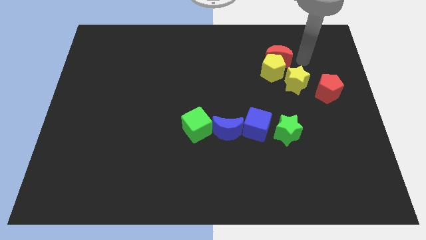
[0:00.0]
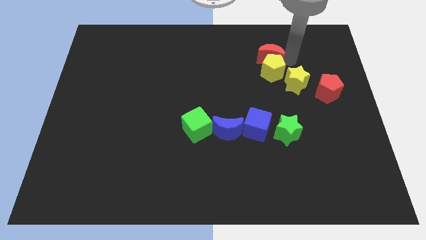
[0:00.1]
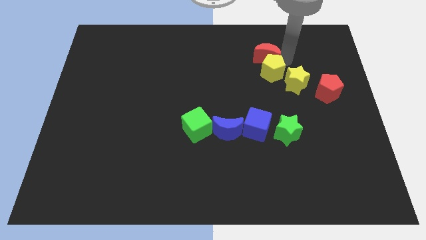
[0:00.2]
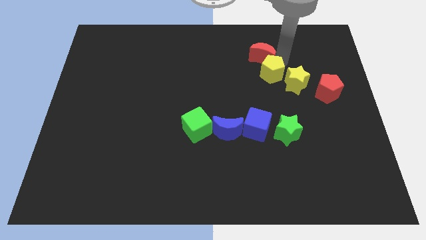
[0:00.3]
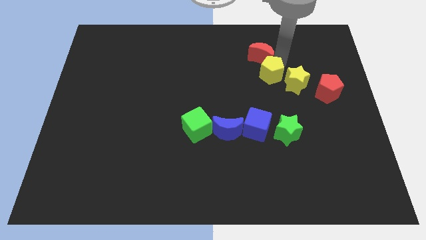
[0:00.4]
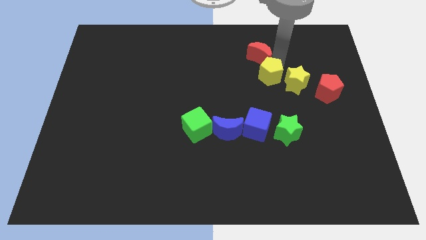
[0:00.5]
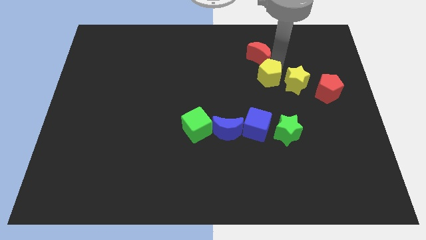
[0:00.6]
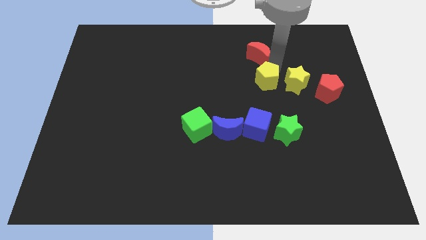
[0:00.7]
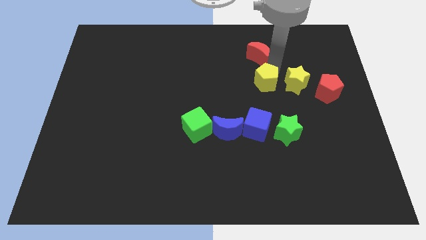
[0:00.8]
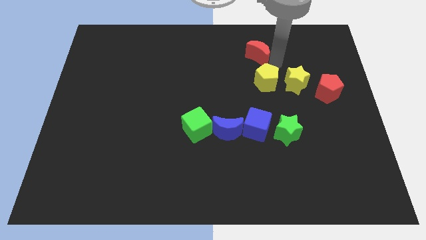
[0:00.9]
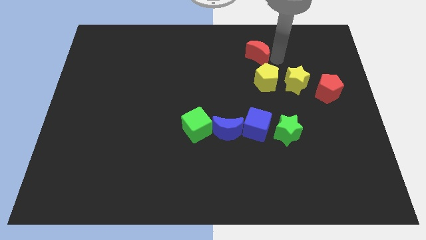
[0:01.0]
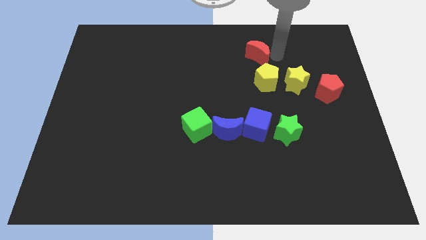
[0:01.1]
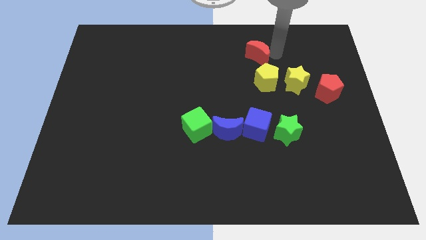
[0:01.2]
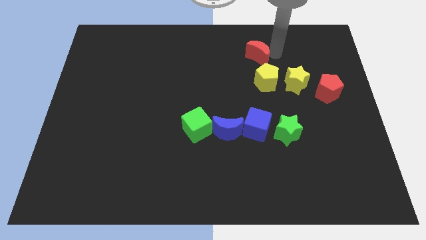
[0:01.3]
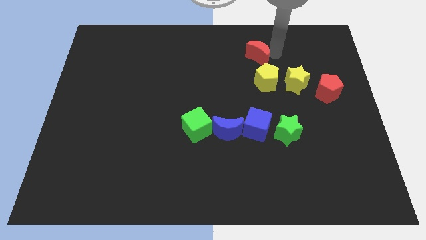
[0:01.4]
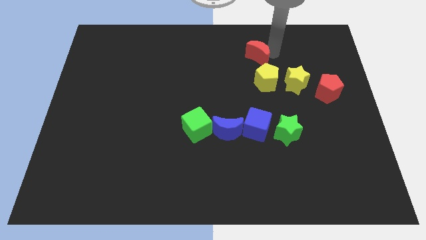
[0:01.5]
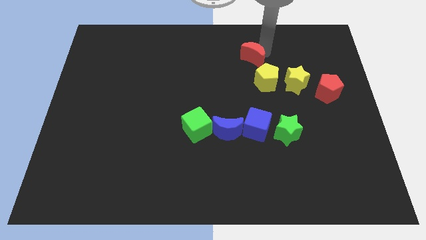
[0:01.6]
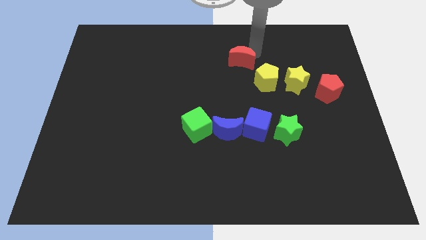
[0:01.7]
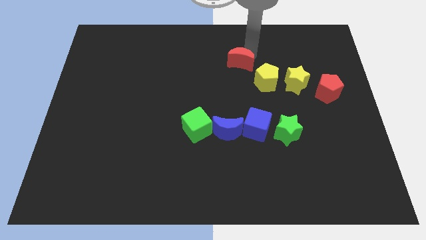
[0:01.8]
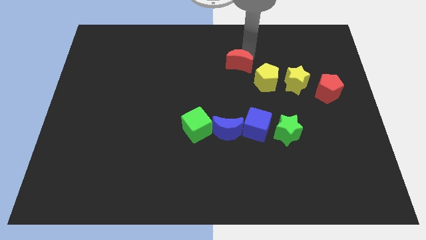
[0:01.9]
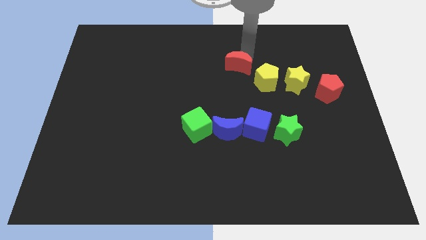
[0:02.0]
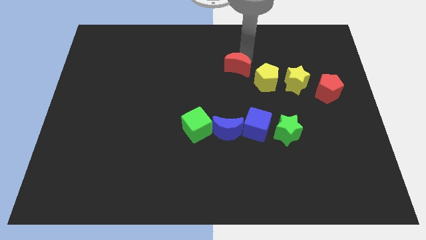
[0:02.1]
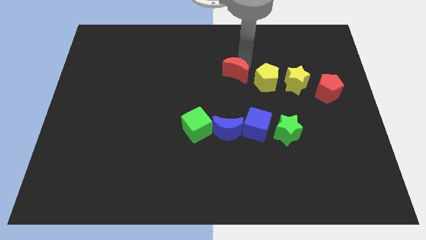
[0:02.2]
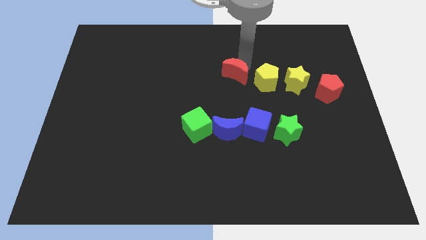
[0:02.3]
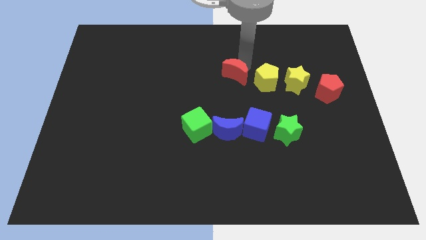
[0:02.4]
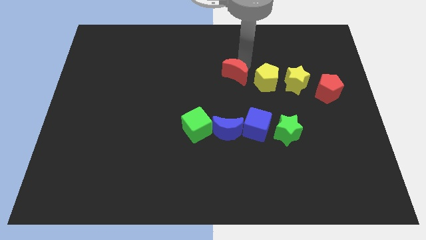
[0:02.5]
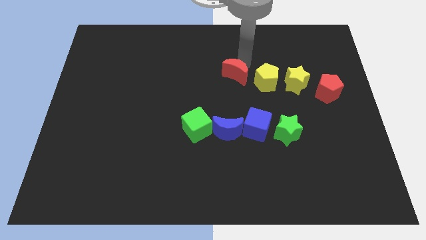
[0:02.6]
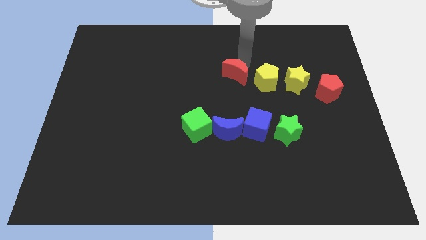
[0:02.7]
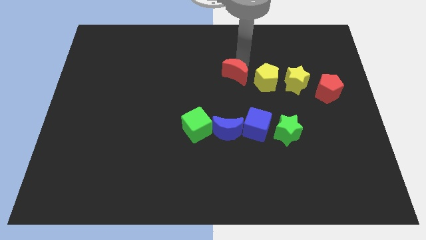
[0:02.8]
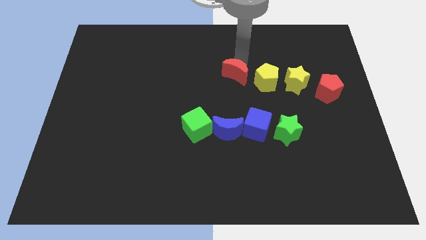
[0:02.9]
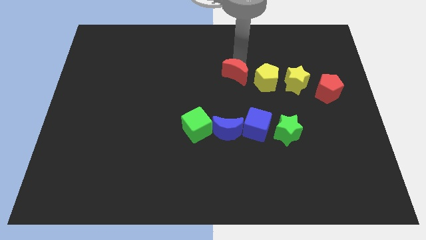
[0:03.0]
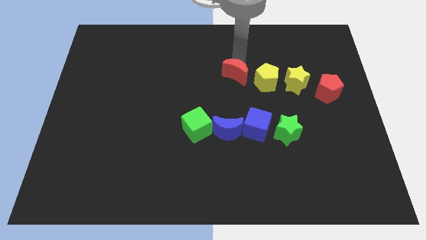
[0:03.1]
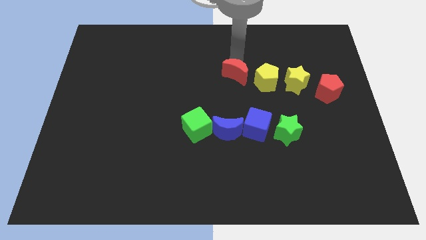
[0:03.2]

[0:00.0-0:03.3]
move the red crescent on the left side of the yellow pentagon

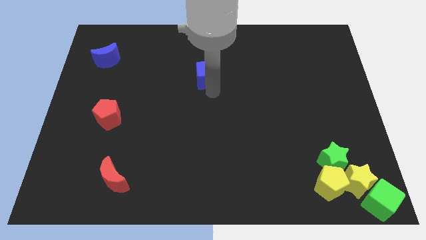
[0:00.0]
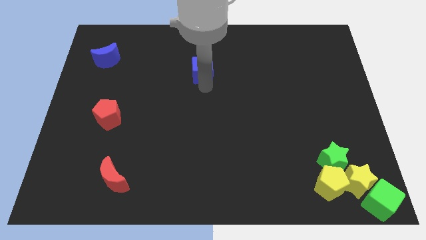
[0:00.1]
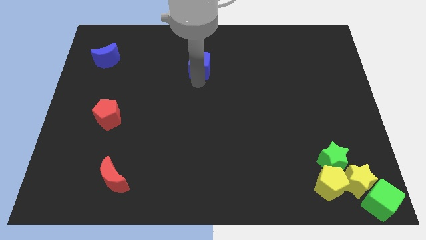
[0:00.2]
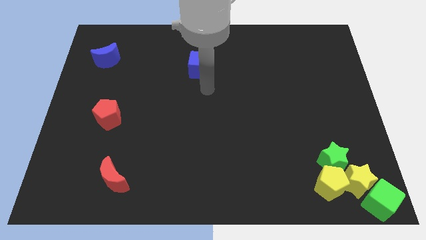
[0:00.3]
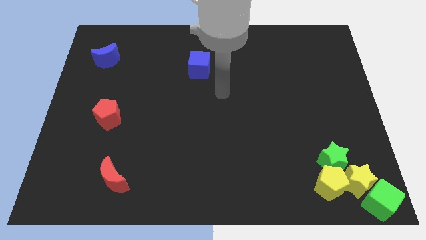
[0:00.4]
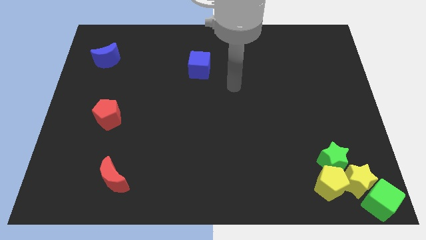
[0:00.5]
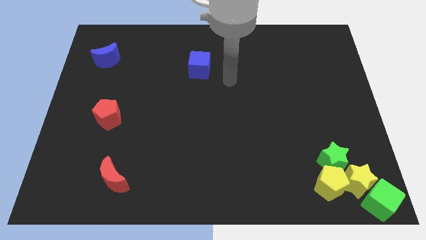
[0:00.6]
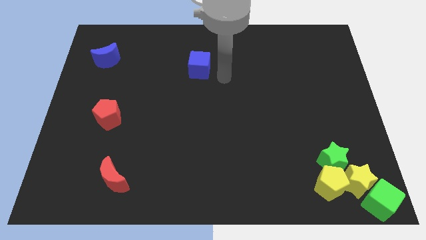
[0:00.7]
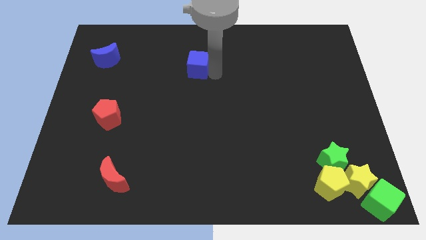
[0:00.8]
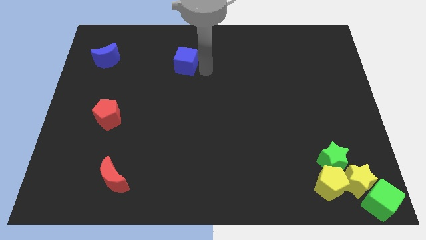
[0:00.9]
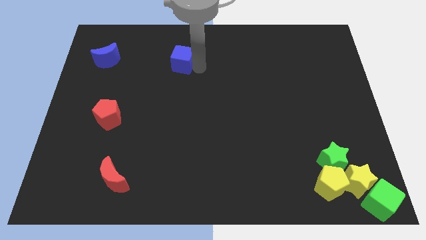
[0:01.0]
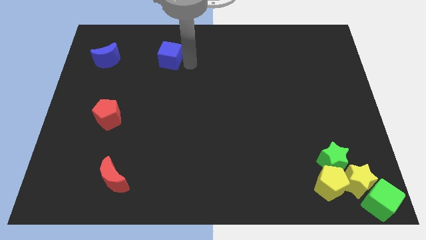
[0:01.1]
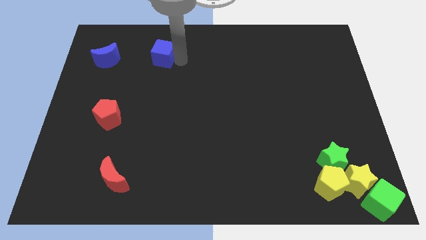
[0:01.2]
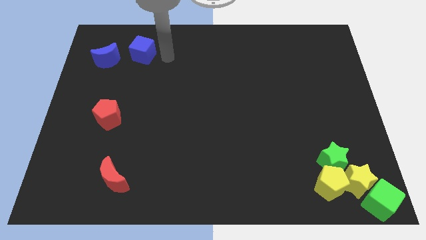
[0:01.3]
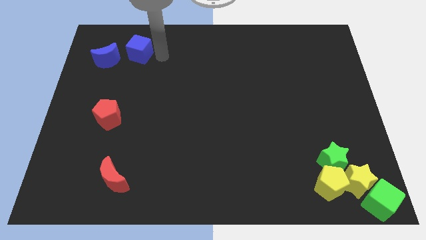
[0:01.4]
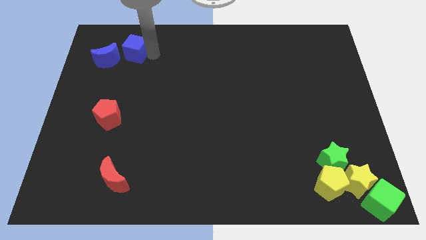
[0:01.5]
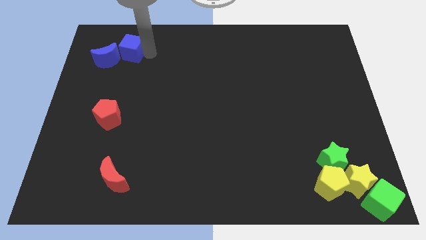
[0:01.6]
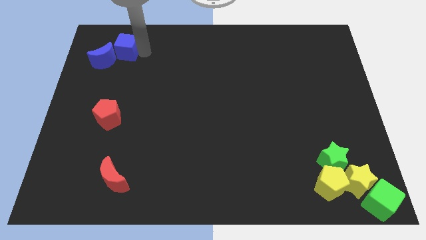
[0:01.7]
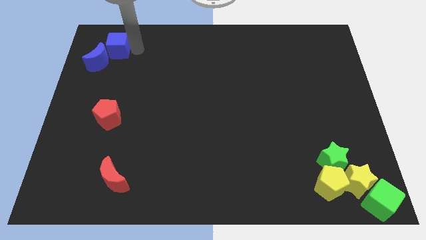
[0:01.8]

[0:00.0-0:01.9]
place the blue cube to the right side of blue moon

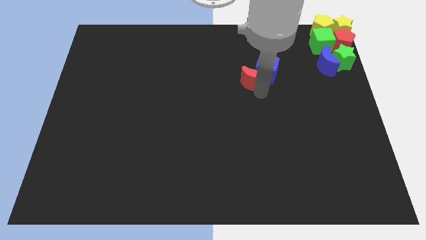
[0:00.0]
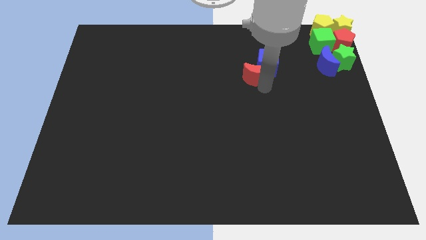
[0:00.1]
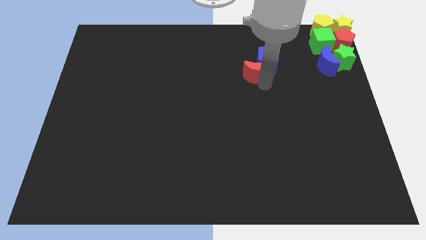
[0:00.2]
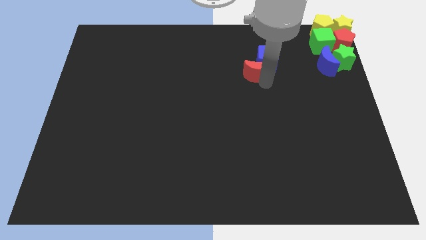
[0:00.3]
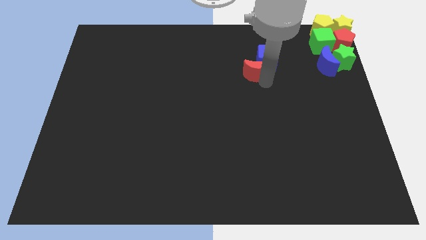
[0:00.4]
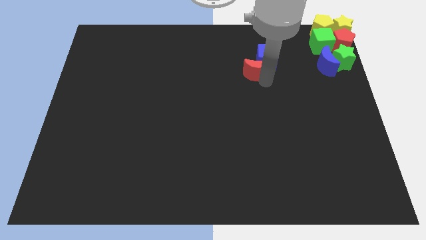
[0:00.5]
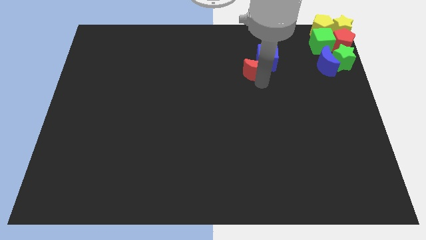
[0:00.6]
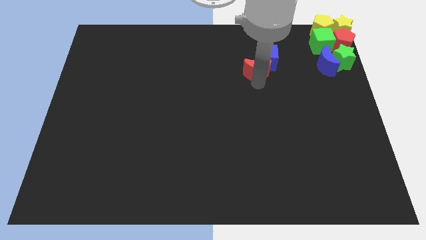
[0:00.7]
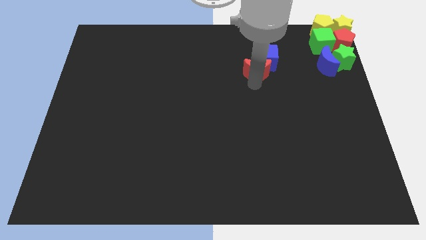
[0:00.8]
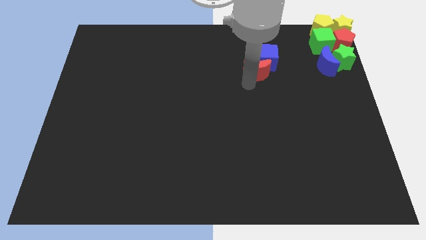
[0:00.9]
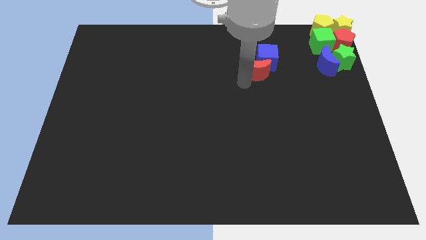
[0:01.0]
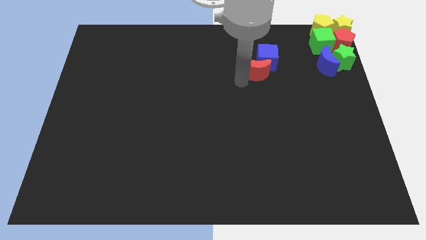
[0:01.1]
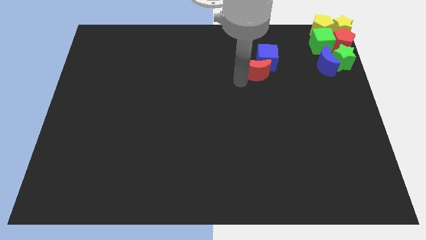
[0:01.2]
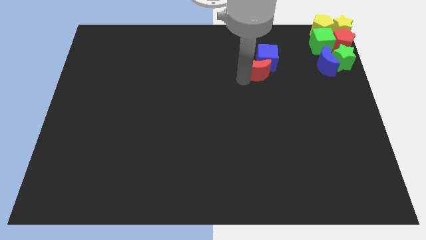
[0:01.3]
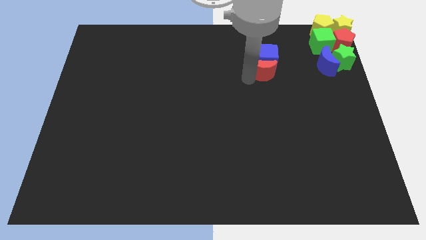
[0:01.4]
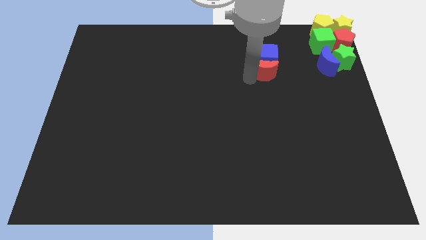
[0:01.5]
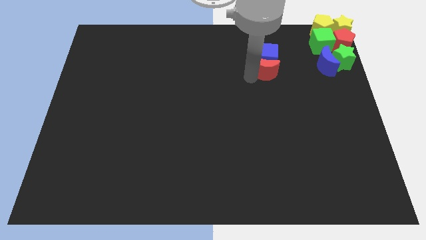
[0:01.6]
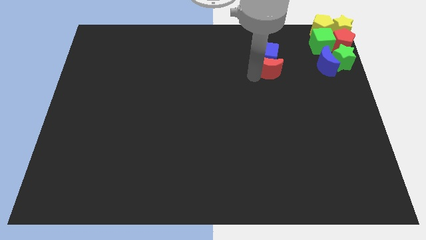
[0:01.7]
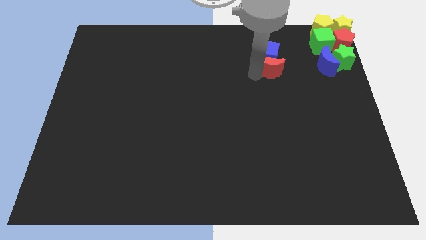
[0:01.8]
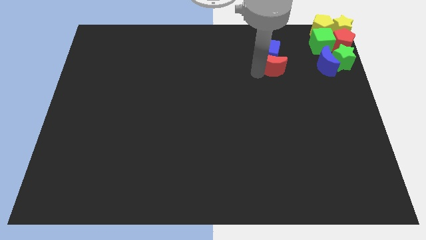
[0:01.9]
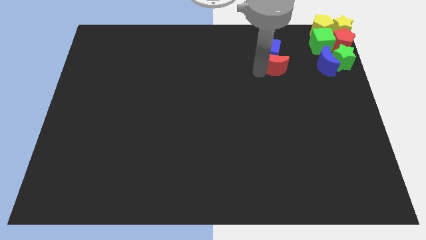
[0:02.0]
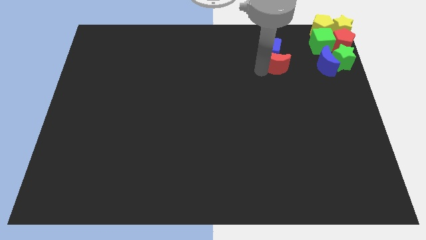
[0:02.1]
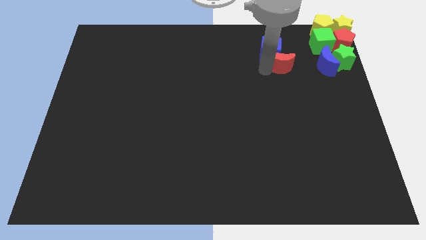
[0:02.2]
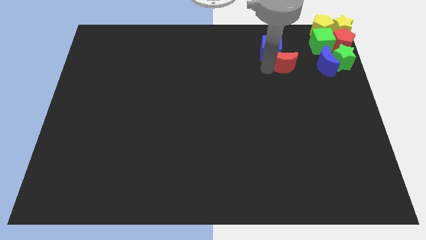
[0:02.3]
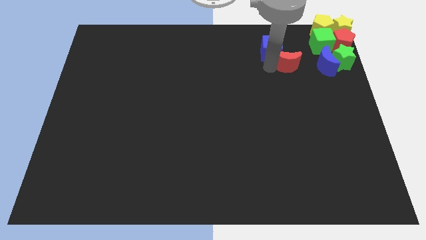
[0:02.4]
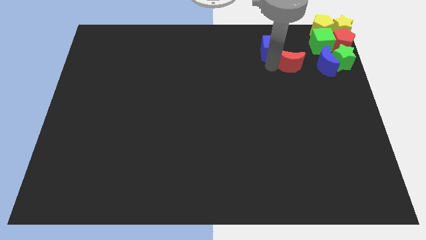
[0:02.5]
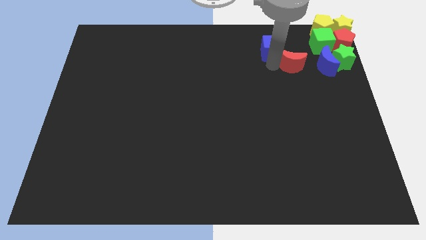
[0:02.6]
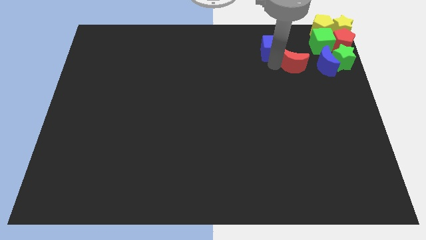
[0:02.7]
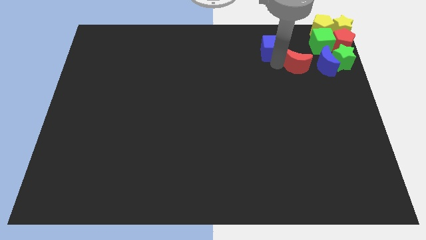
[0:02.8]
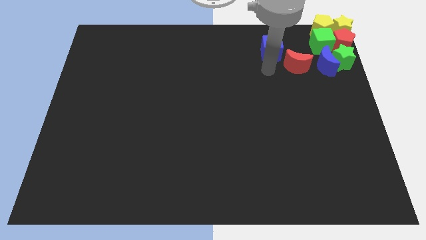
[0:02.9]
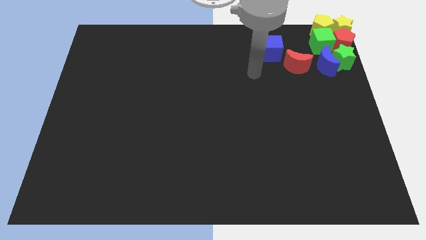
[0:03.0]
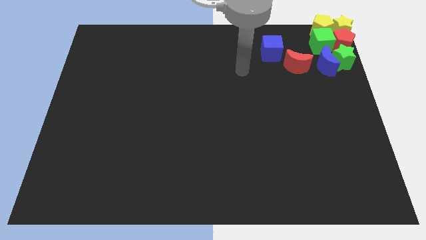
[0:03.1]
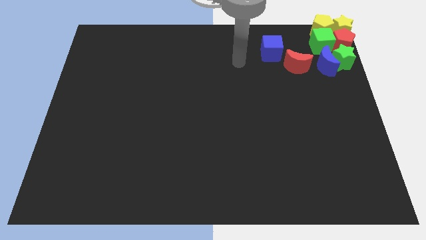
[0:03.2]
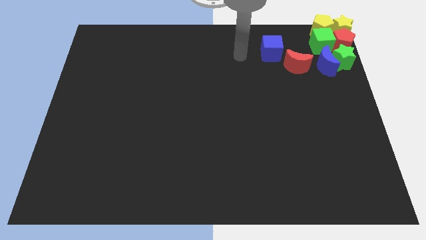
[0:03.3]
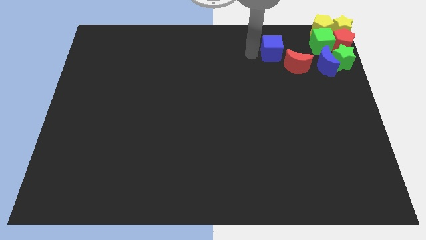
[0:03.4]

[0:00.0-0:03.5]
move red crescent towards blue crescent

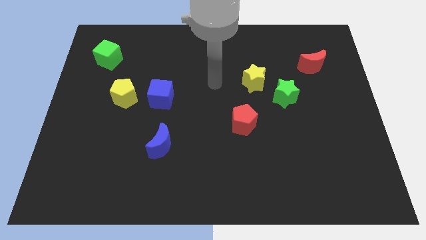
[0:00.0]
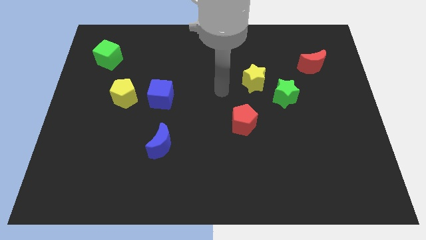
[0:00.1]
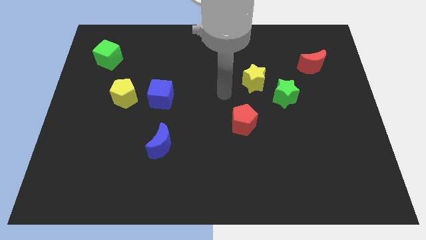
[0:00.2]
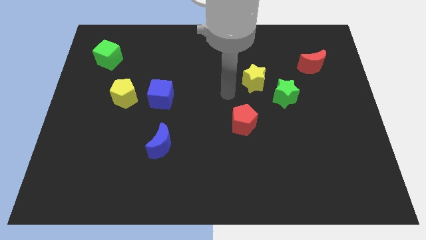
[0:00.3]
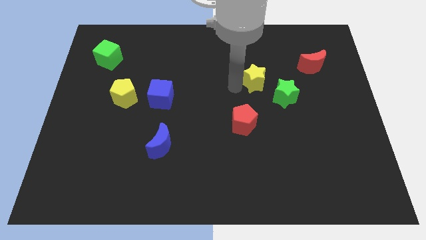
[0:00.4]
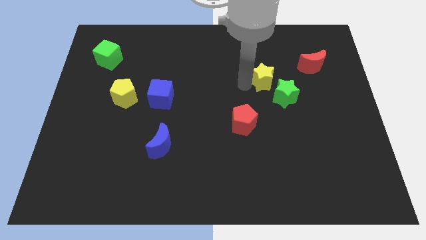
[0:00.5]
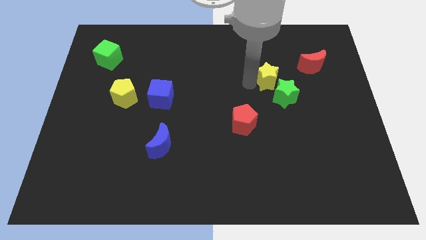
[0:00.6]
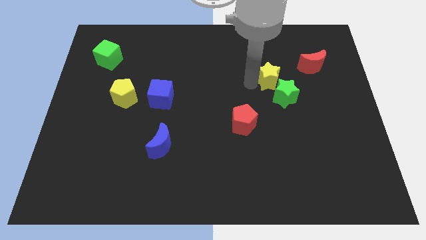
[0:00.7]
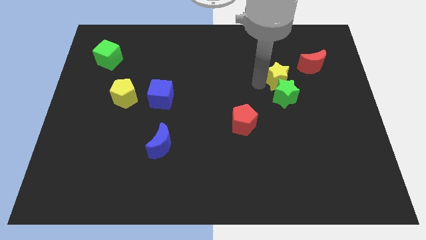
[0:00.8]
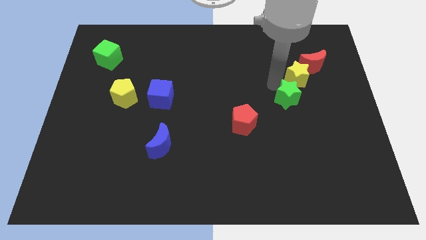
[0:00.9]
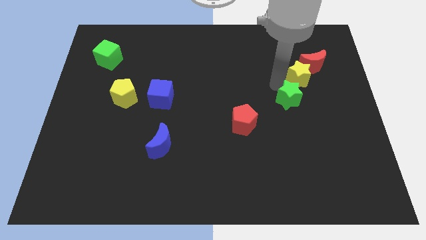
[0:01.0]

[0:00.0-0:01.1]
place yellow star in between red moon and green star
